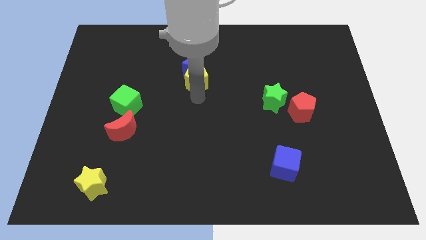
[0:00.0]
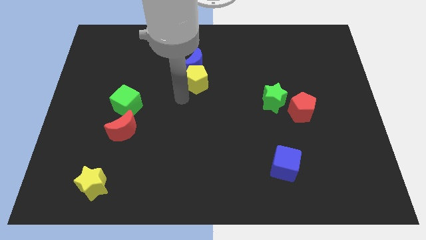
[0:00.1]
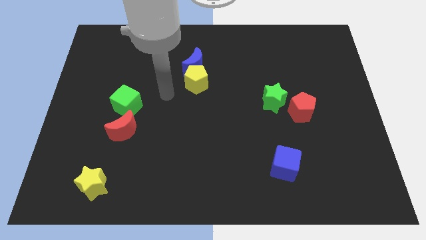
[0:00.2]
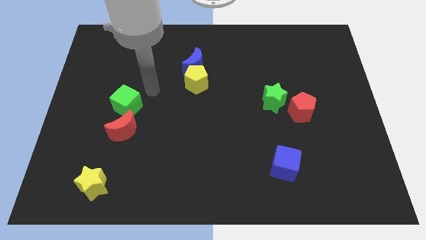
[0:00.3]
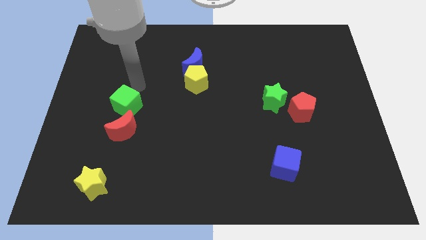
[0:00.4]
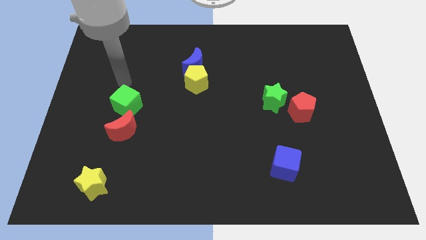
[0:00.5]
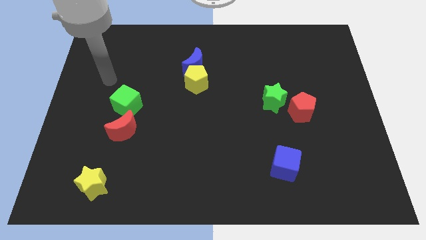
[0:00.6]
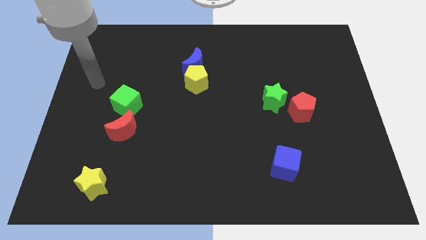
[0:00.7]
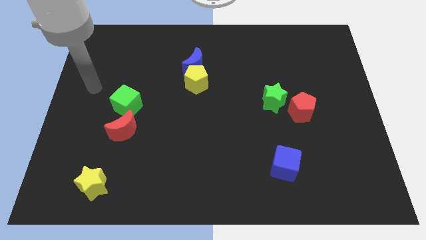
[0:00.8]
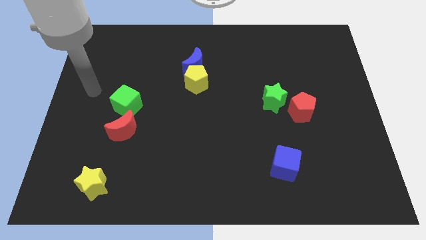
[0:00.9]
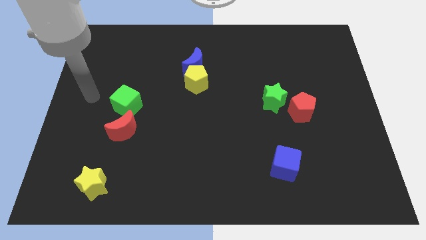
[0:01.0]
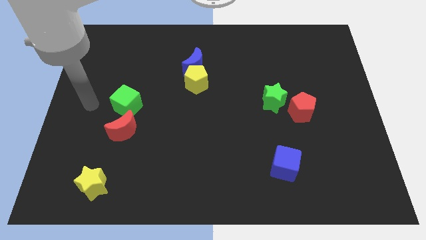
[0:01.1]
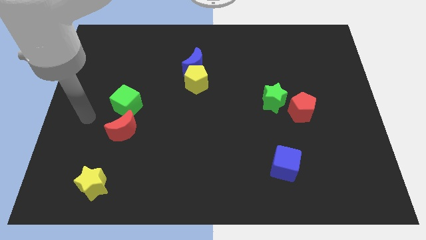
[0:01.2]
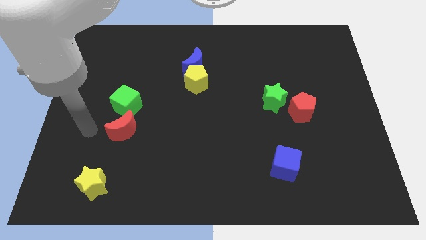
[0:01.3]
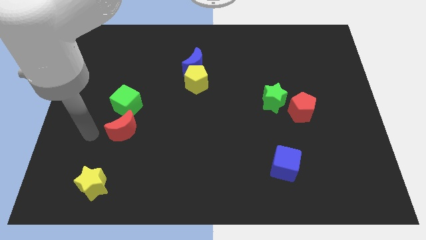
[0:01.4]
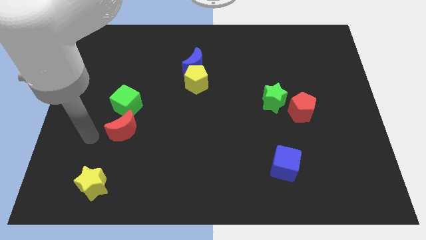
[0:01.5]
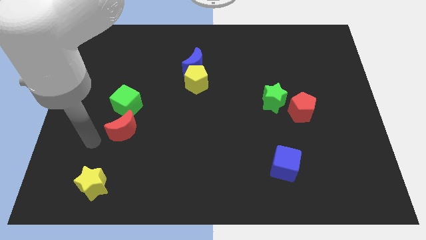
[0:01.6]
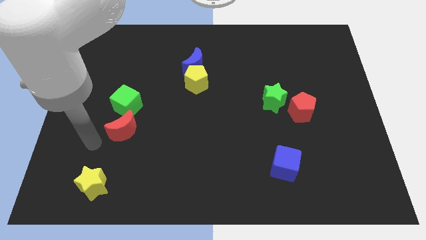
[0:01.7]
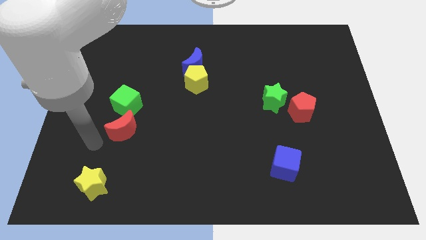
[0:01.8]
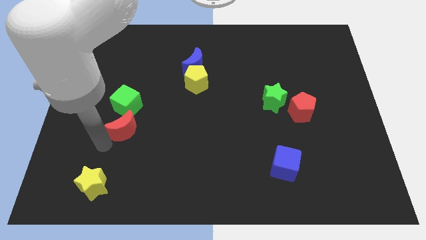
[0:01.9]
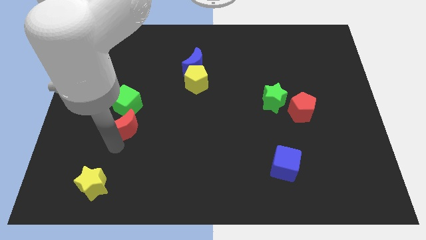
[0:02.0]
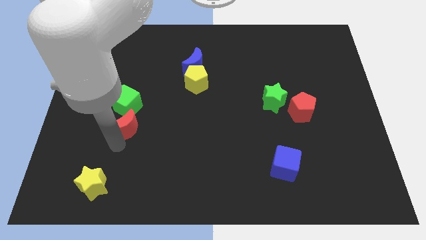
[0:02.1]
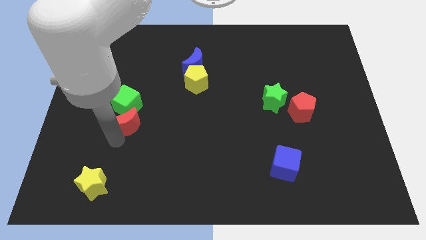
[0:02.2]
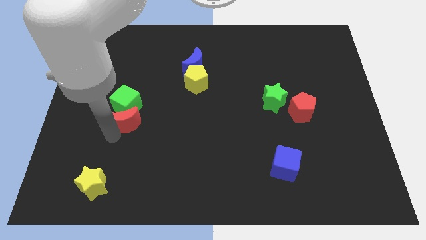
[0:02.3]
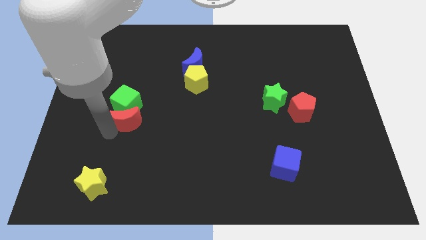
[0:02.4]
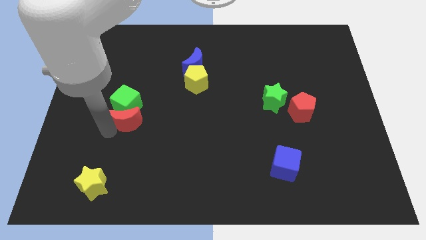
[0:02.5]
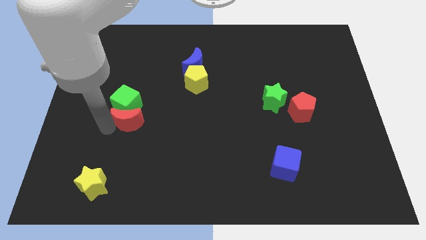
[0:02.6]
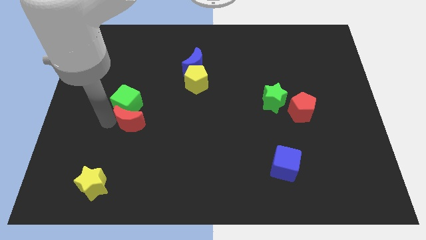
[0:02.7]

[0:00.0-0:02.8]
push the red moon into the green cube

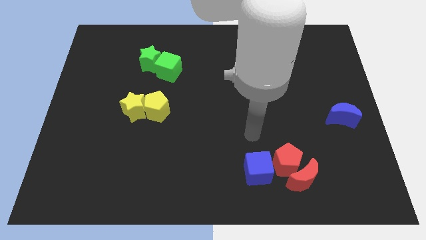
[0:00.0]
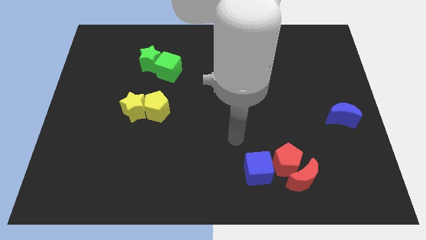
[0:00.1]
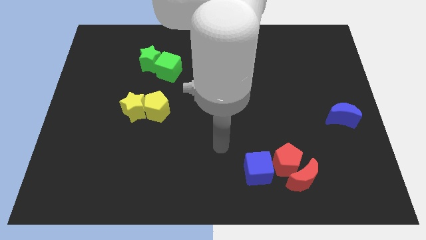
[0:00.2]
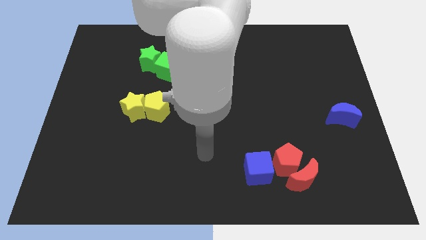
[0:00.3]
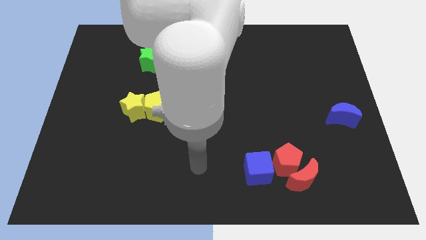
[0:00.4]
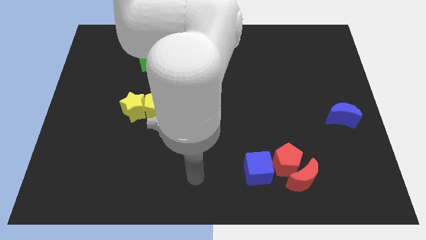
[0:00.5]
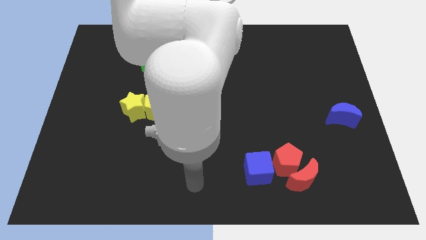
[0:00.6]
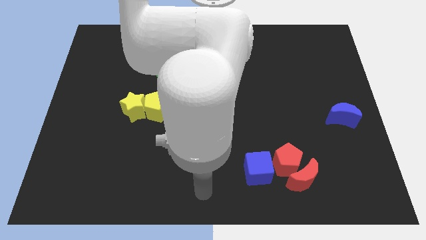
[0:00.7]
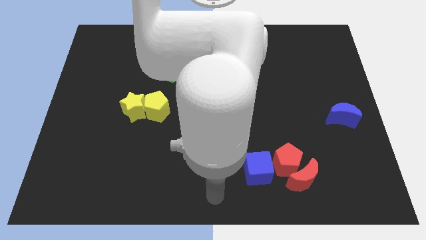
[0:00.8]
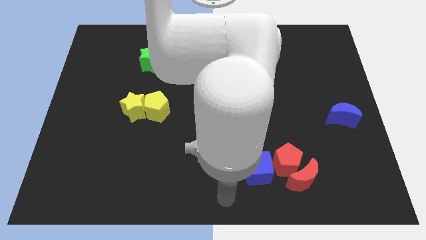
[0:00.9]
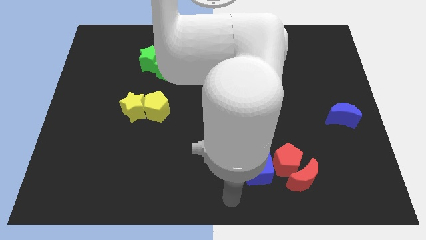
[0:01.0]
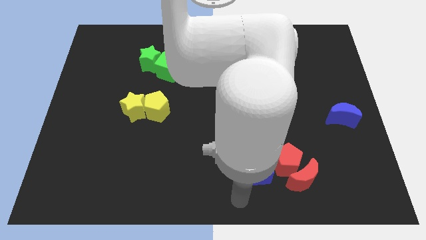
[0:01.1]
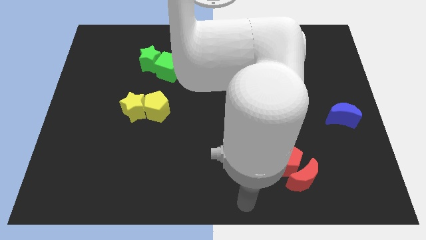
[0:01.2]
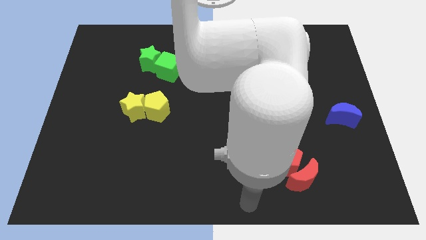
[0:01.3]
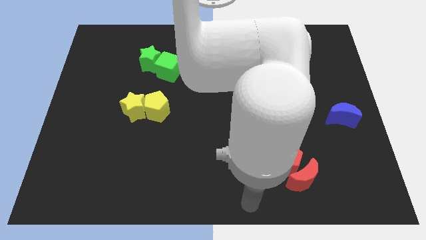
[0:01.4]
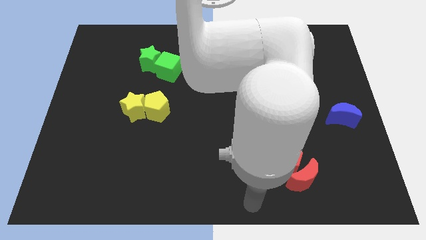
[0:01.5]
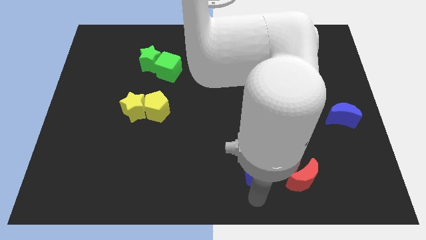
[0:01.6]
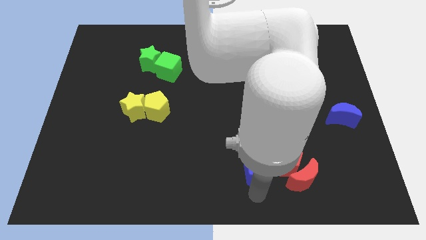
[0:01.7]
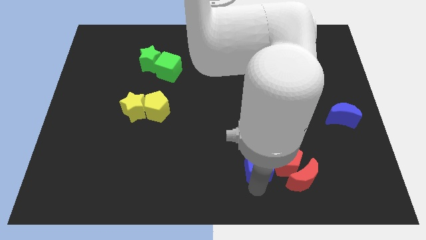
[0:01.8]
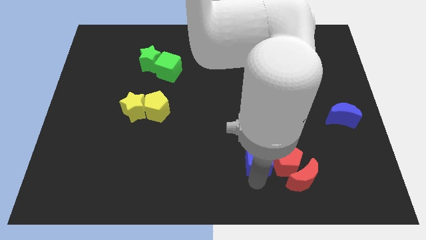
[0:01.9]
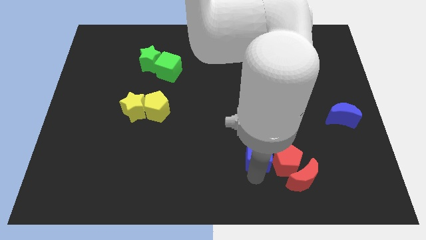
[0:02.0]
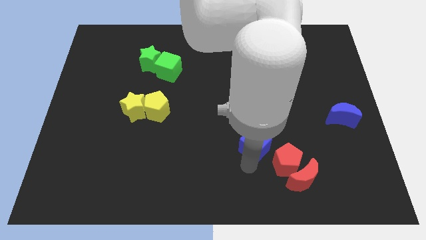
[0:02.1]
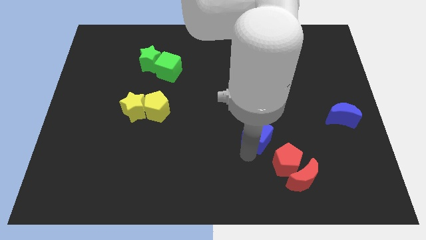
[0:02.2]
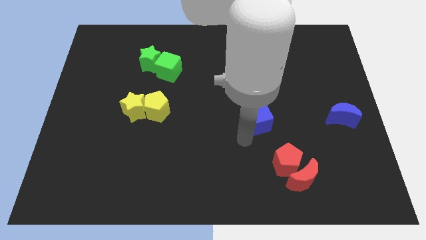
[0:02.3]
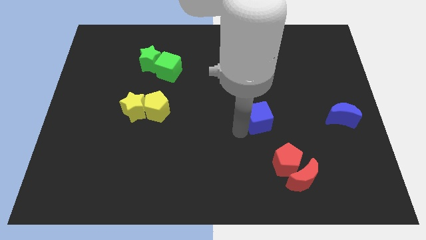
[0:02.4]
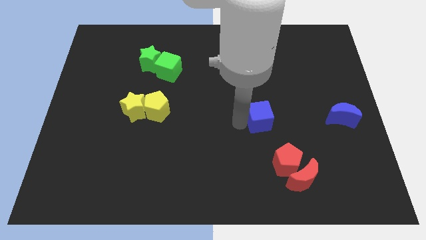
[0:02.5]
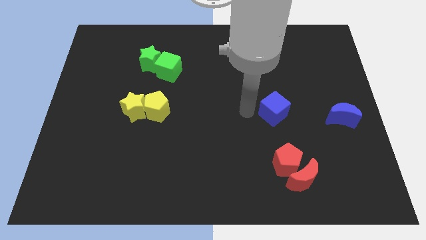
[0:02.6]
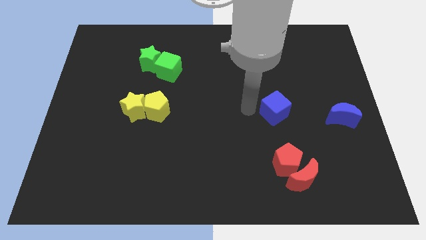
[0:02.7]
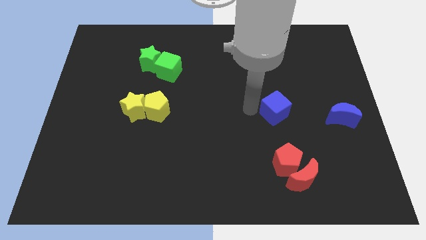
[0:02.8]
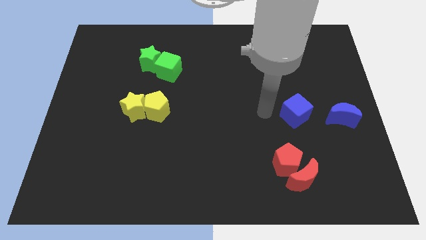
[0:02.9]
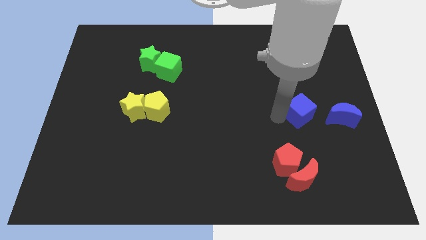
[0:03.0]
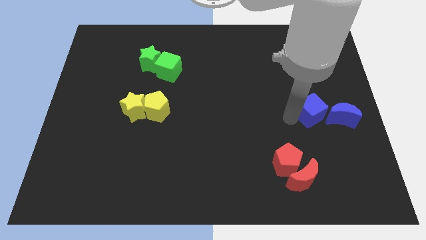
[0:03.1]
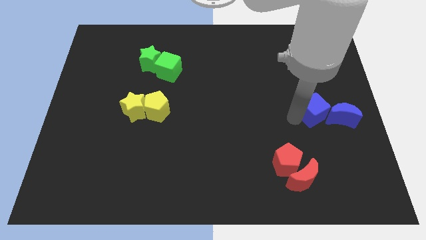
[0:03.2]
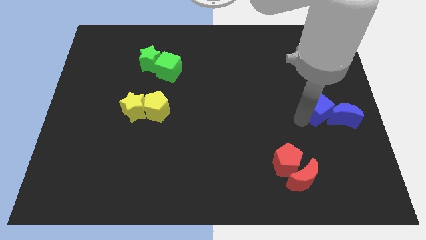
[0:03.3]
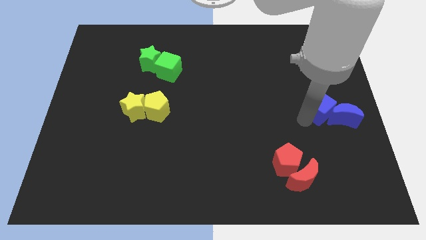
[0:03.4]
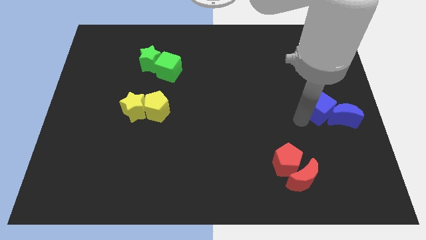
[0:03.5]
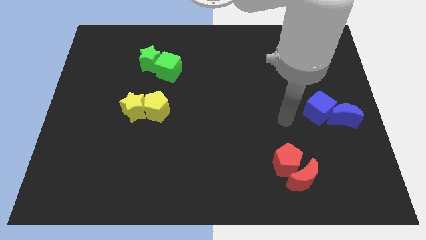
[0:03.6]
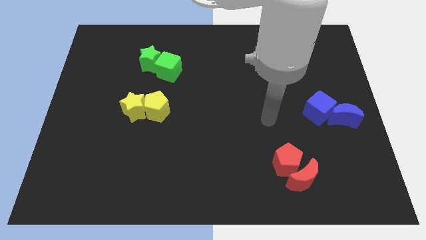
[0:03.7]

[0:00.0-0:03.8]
push the blue cube towards the left side of the blue crescent

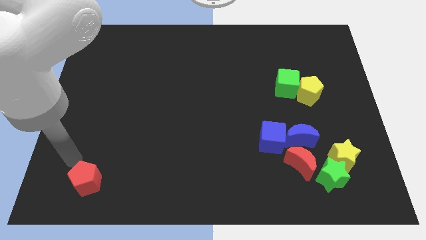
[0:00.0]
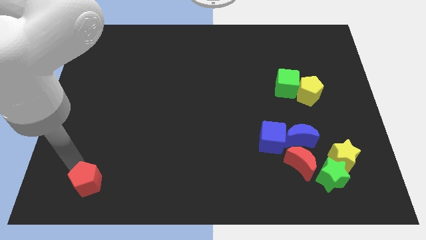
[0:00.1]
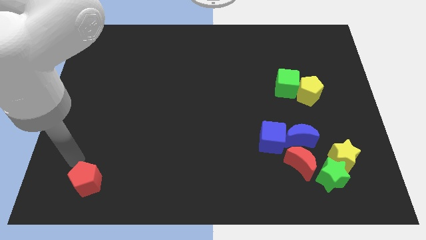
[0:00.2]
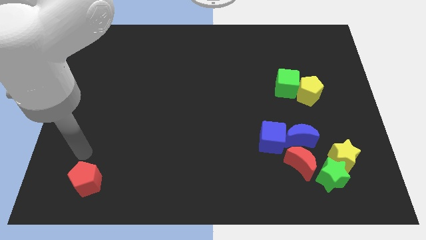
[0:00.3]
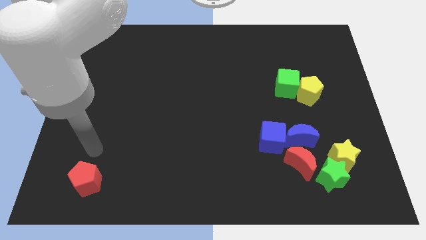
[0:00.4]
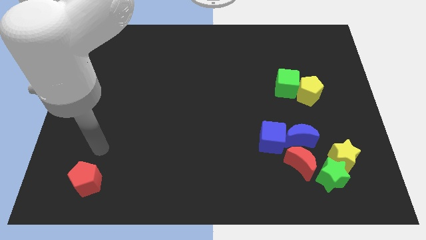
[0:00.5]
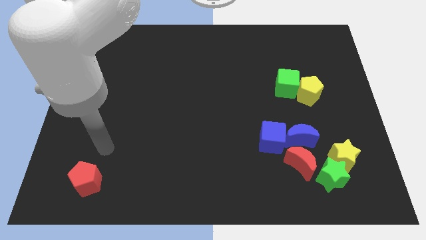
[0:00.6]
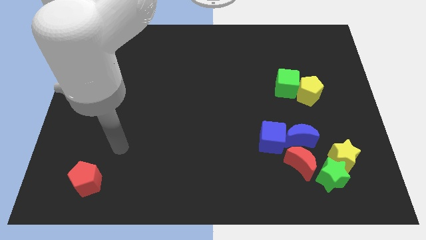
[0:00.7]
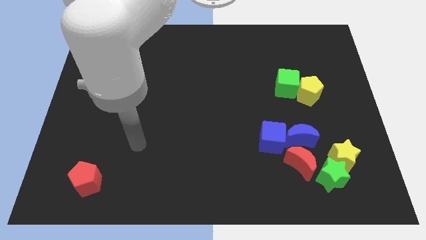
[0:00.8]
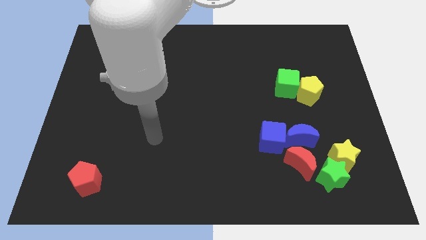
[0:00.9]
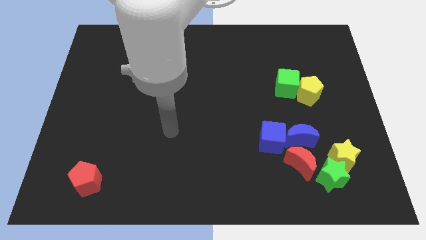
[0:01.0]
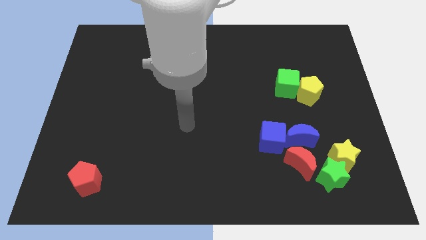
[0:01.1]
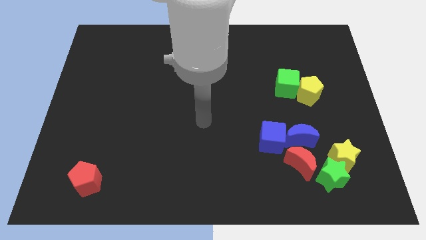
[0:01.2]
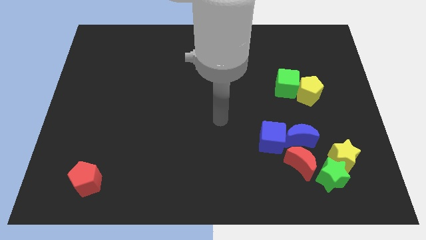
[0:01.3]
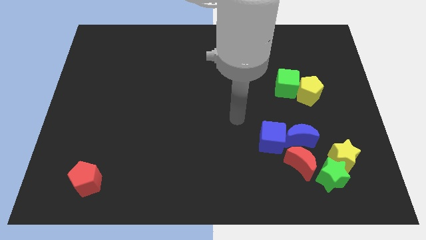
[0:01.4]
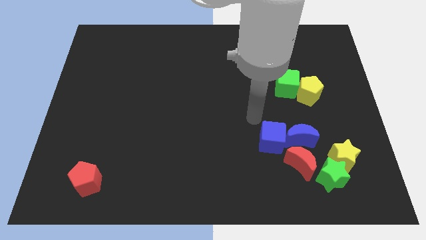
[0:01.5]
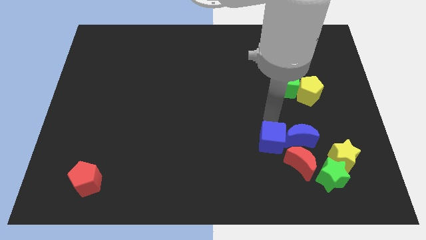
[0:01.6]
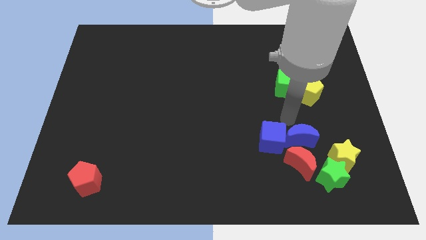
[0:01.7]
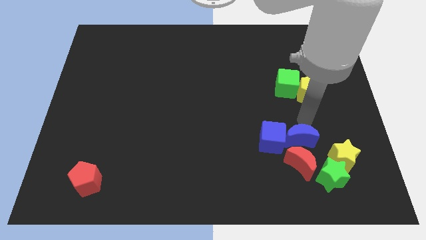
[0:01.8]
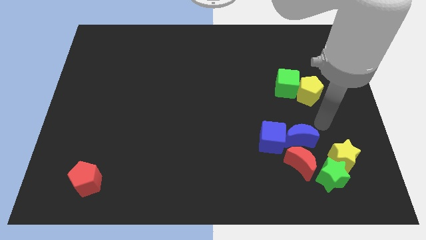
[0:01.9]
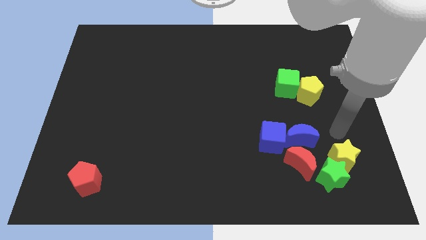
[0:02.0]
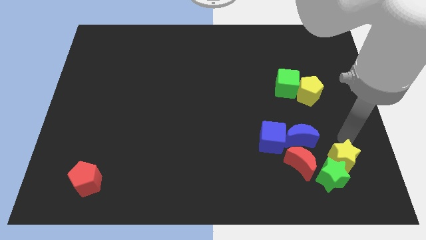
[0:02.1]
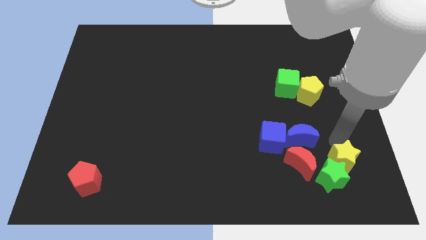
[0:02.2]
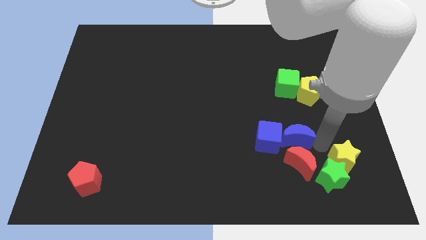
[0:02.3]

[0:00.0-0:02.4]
move your arm towards the blue moon
